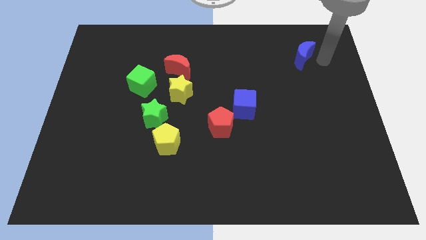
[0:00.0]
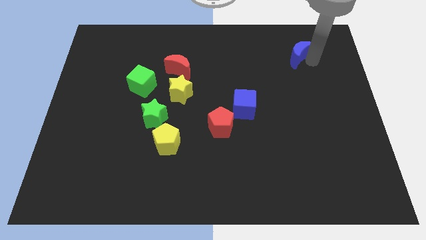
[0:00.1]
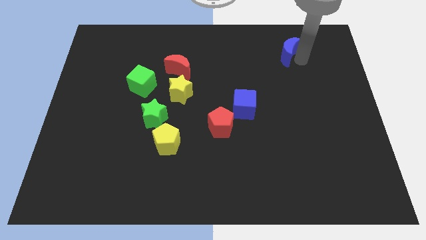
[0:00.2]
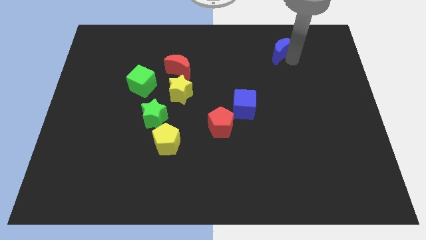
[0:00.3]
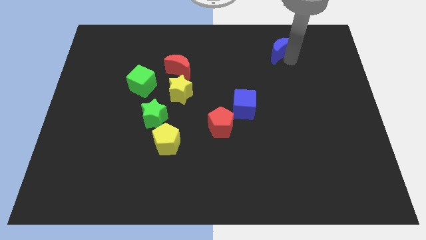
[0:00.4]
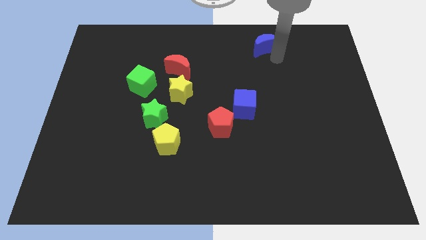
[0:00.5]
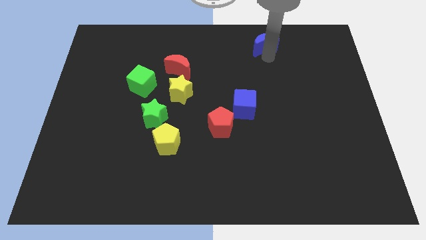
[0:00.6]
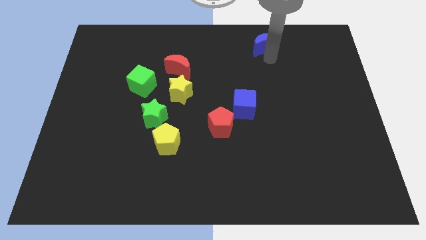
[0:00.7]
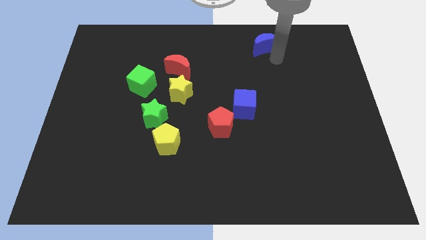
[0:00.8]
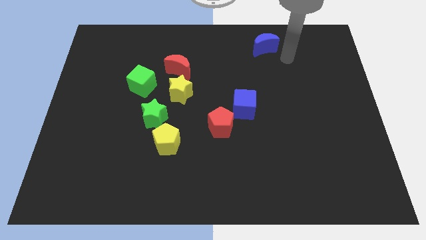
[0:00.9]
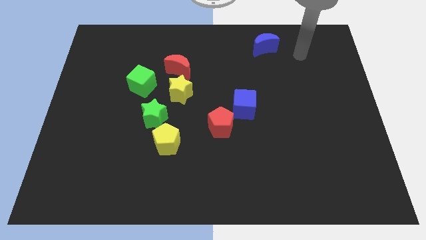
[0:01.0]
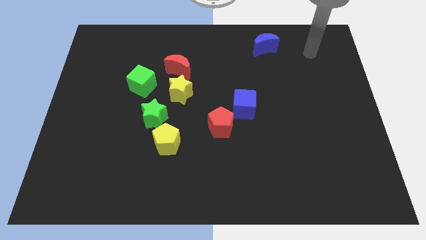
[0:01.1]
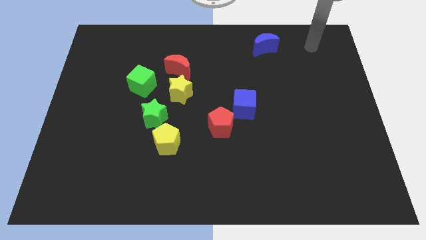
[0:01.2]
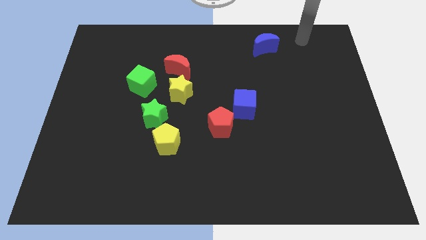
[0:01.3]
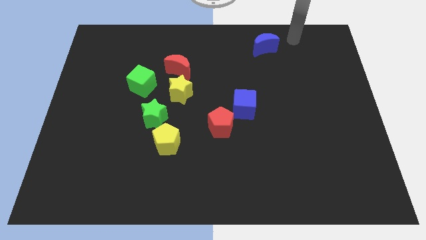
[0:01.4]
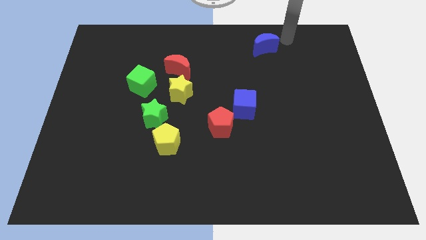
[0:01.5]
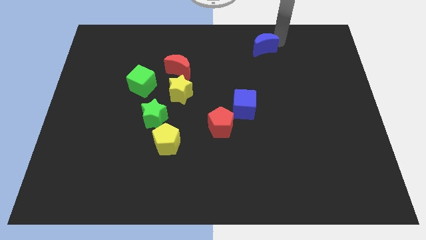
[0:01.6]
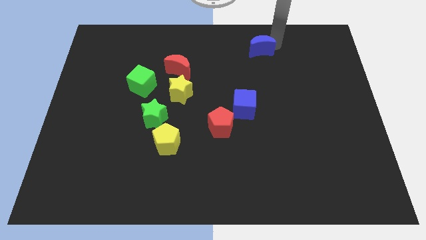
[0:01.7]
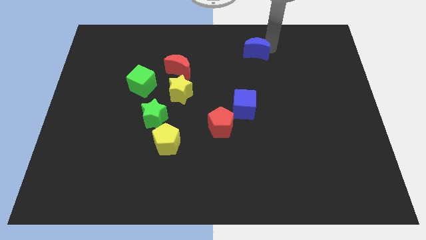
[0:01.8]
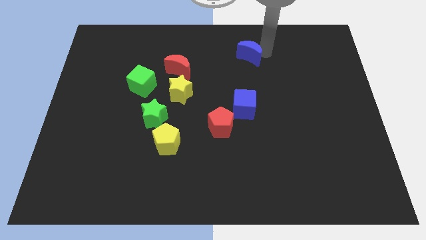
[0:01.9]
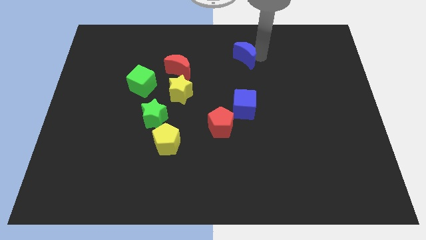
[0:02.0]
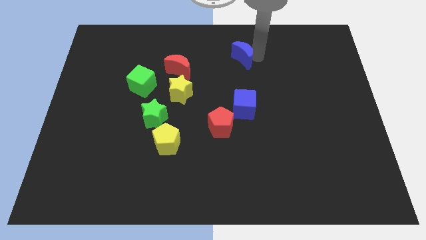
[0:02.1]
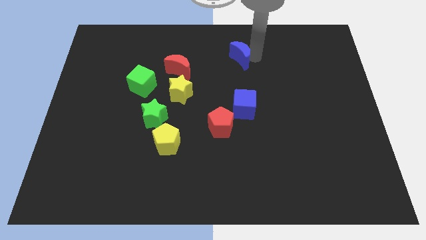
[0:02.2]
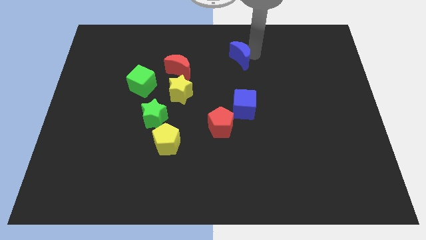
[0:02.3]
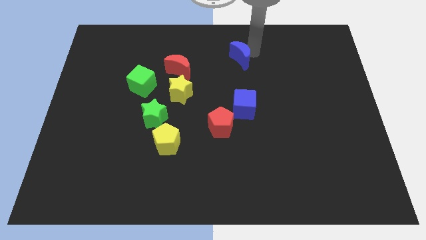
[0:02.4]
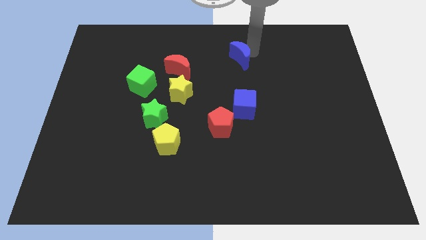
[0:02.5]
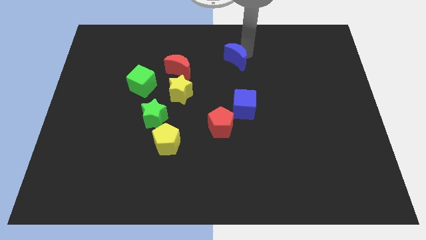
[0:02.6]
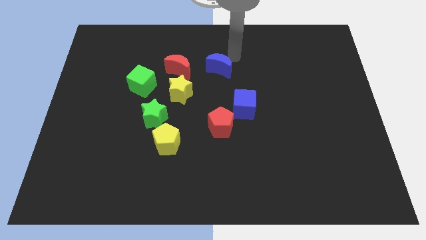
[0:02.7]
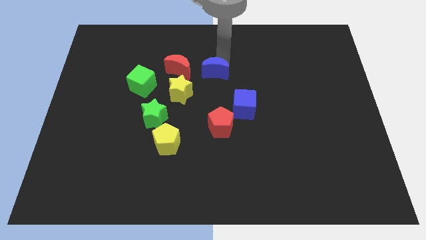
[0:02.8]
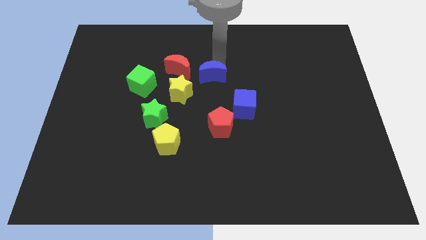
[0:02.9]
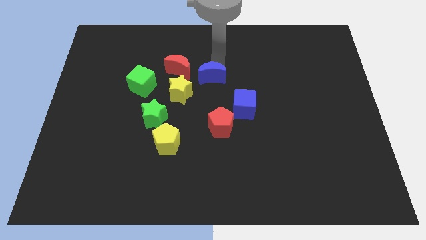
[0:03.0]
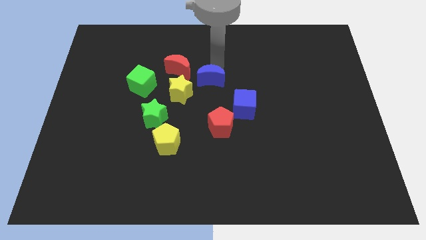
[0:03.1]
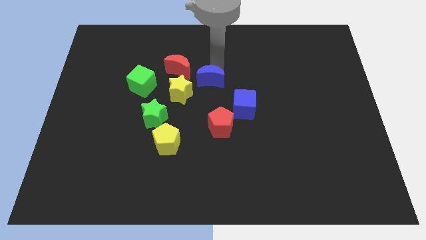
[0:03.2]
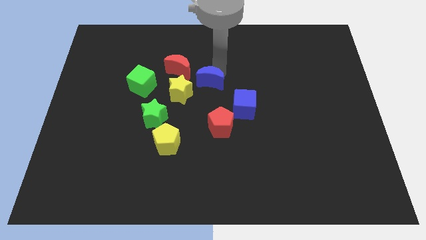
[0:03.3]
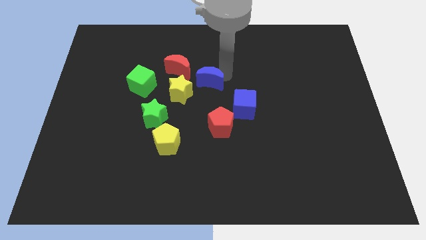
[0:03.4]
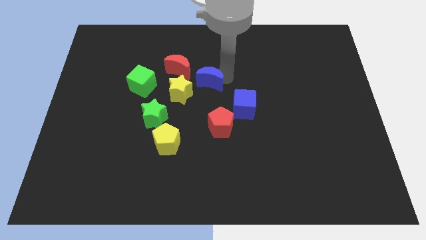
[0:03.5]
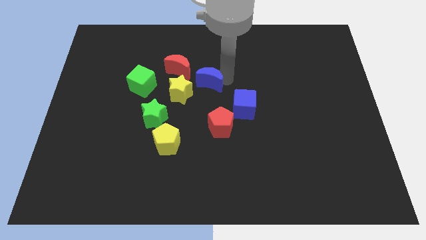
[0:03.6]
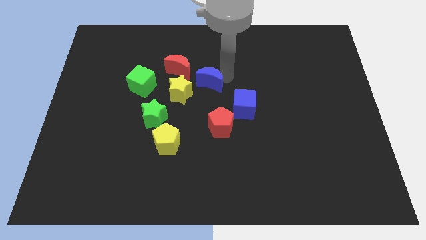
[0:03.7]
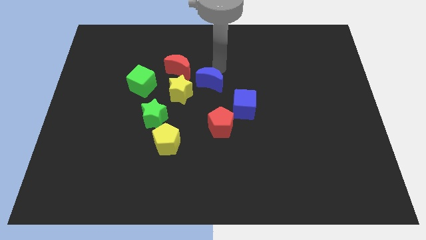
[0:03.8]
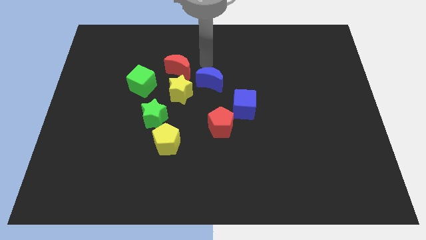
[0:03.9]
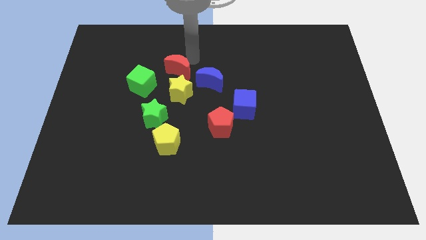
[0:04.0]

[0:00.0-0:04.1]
slide blue moon towards yellow star

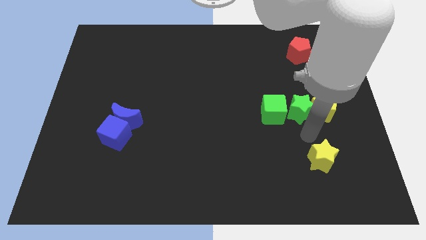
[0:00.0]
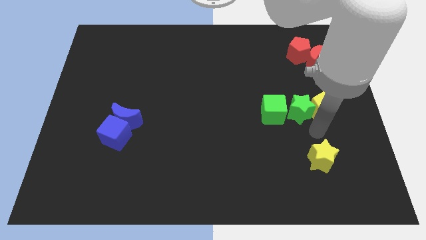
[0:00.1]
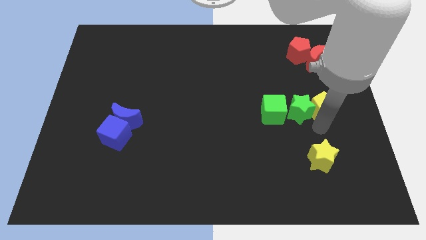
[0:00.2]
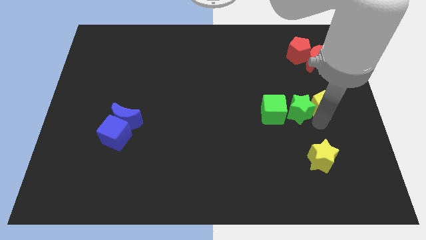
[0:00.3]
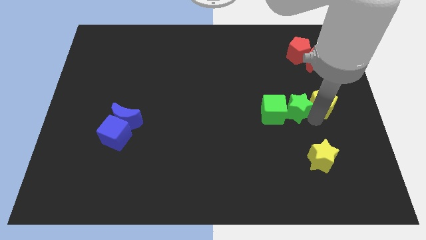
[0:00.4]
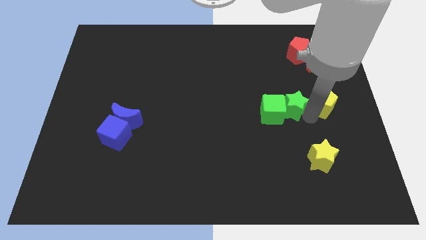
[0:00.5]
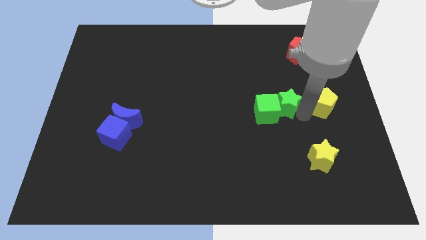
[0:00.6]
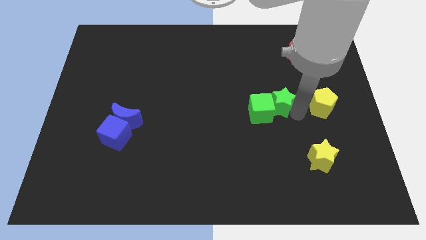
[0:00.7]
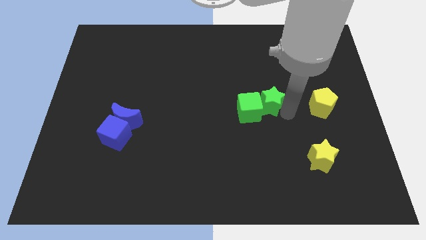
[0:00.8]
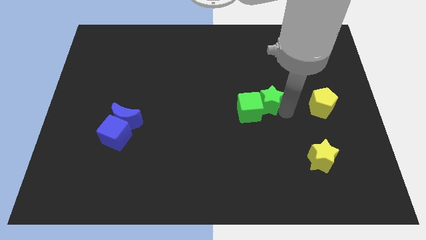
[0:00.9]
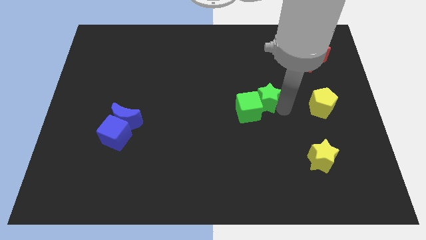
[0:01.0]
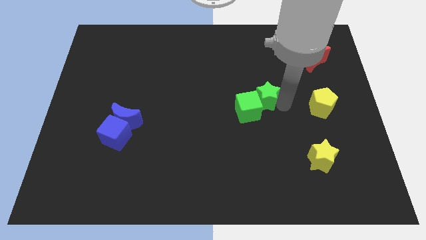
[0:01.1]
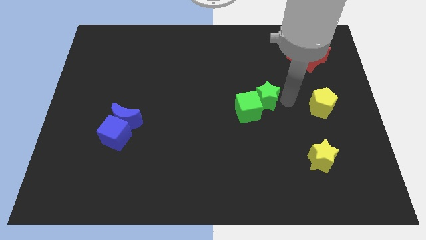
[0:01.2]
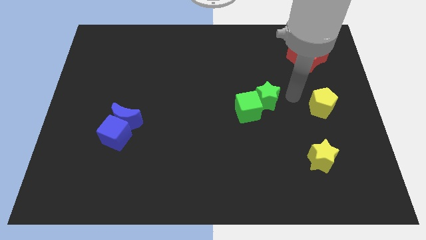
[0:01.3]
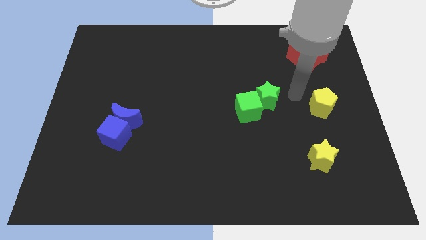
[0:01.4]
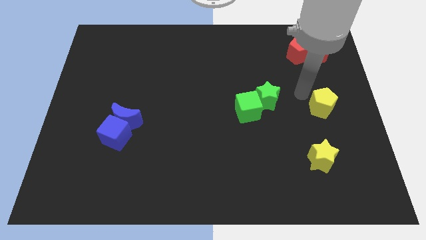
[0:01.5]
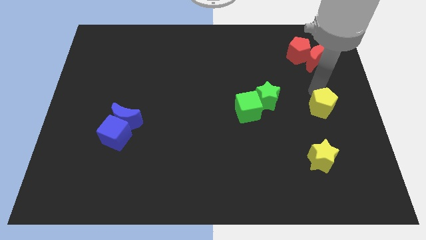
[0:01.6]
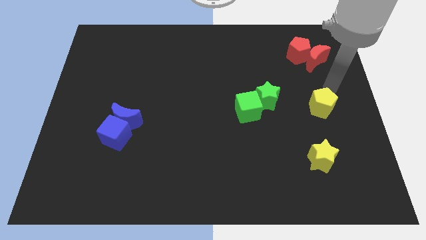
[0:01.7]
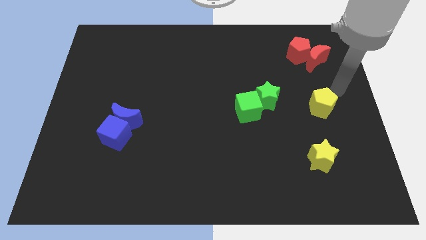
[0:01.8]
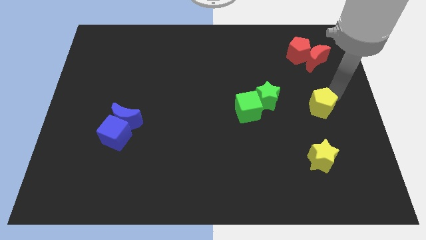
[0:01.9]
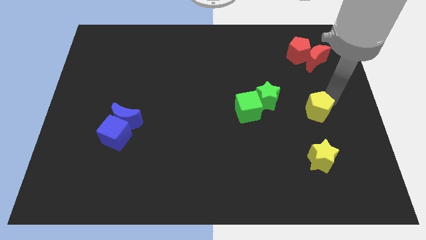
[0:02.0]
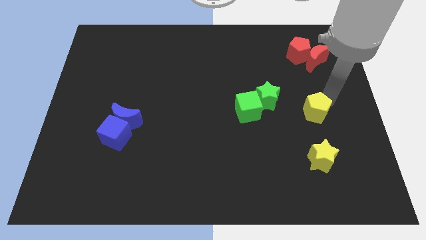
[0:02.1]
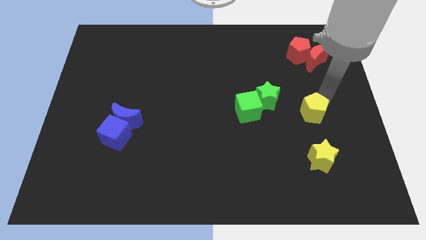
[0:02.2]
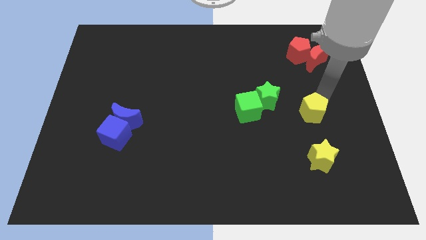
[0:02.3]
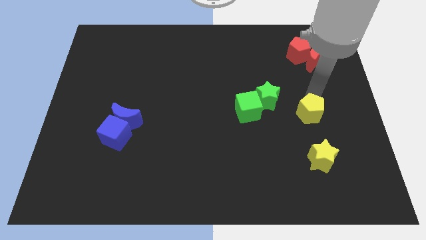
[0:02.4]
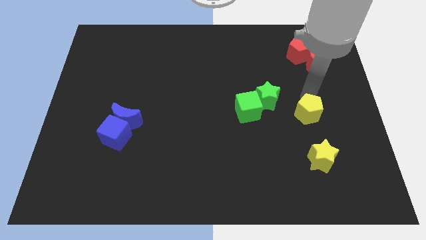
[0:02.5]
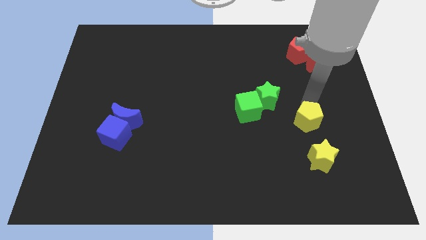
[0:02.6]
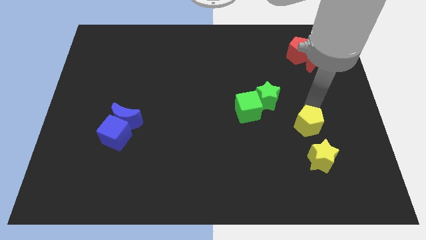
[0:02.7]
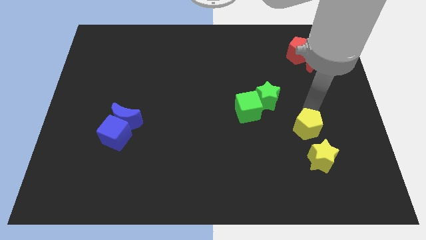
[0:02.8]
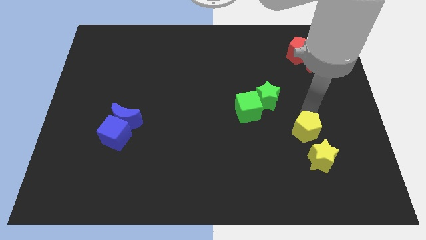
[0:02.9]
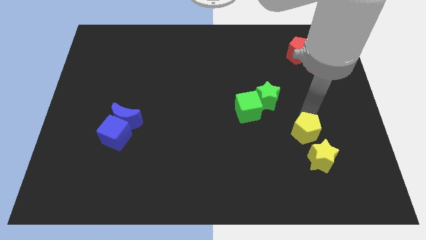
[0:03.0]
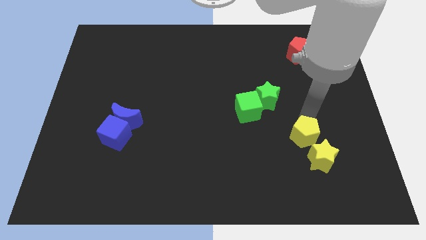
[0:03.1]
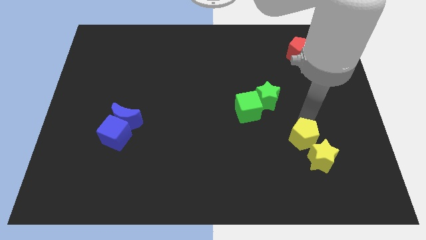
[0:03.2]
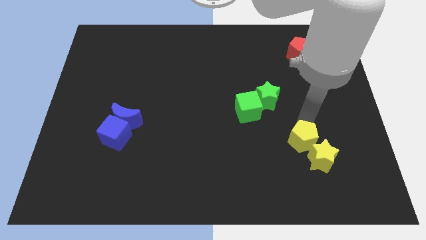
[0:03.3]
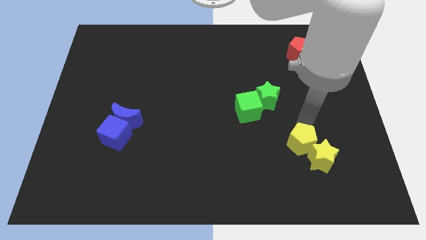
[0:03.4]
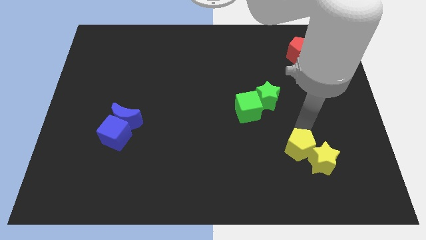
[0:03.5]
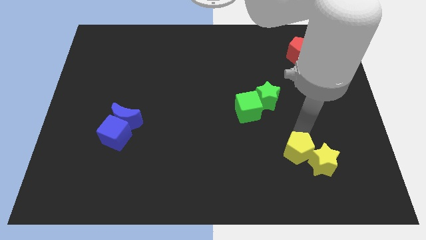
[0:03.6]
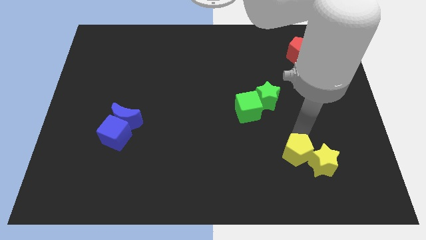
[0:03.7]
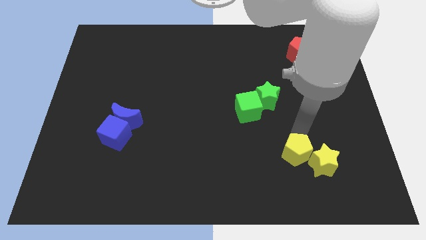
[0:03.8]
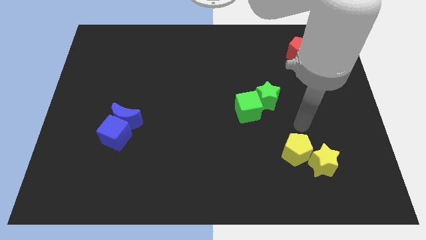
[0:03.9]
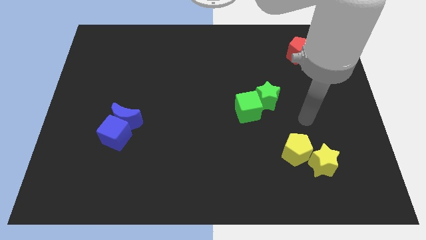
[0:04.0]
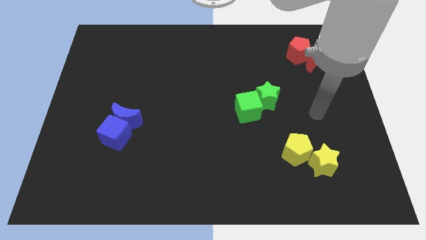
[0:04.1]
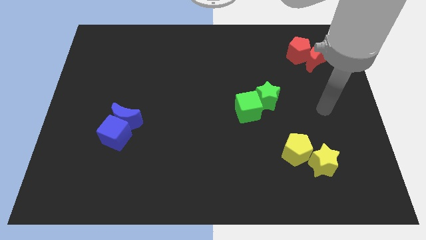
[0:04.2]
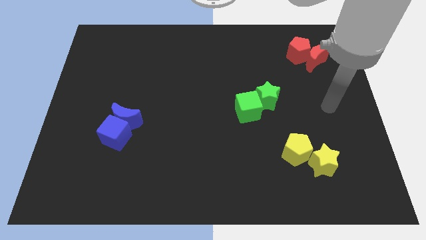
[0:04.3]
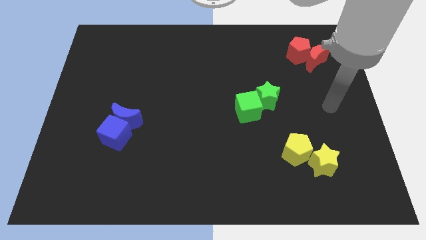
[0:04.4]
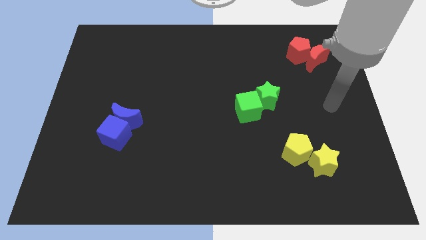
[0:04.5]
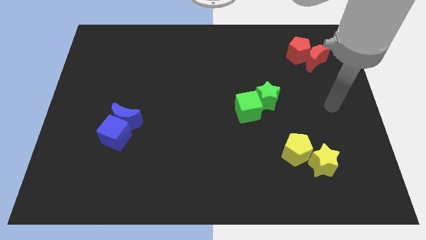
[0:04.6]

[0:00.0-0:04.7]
make two pairs with green blocks and yellow blocks

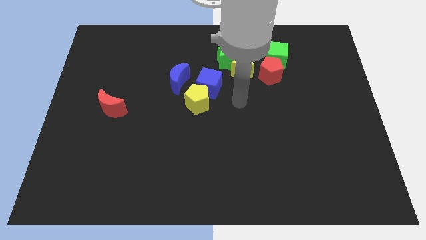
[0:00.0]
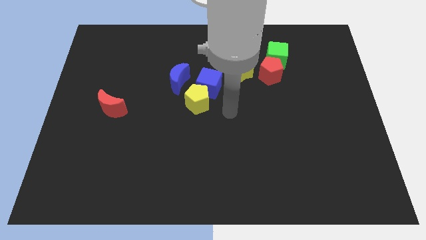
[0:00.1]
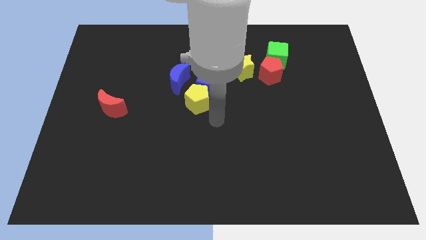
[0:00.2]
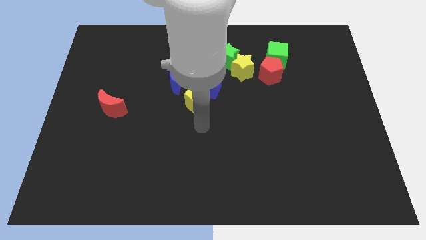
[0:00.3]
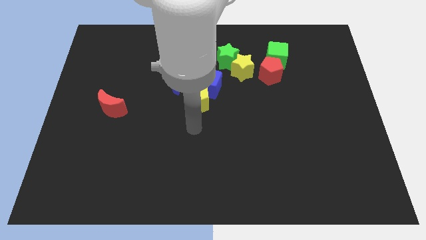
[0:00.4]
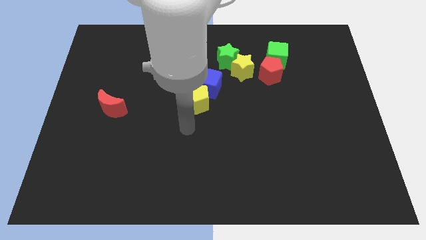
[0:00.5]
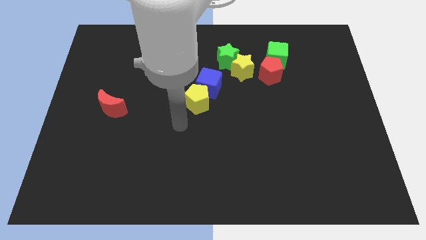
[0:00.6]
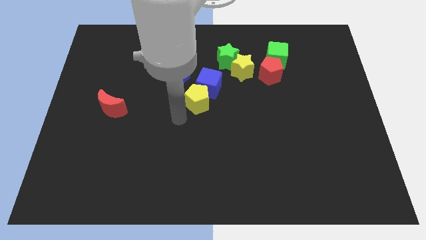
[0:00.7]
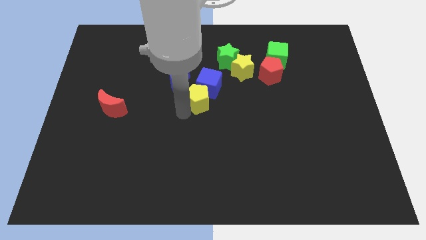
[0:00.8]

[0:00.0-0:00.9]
move your arm to the bottom of yellow pentagon
